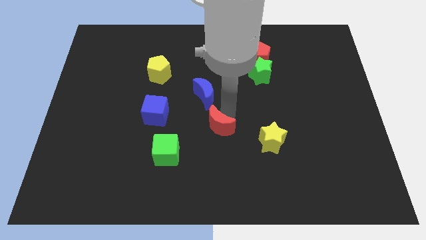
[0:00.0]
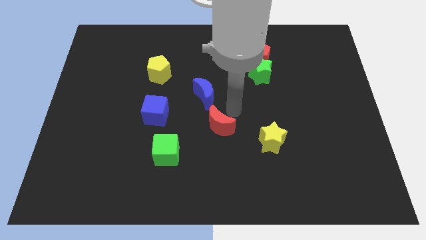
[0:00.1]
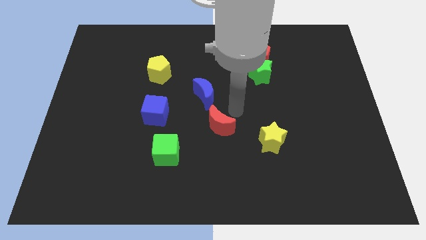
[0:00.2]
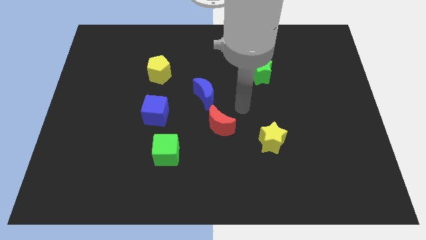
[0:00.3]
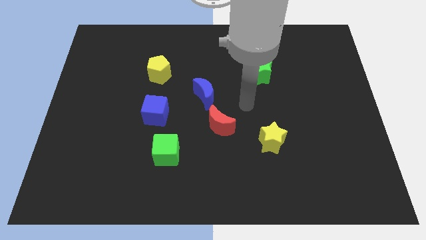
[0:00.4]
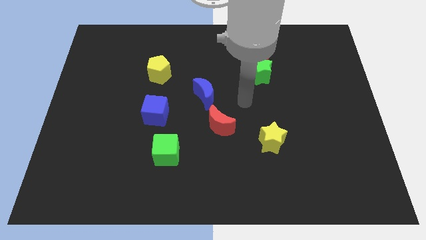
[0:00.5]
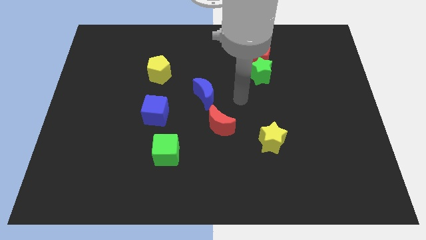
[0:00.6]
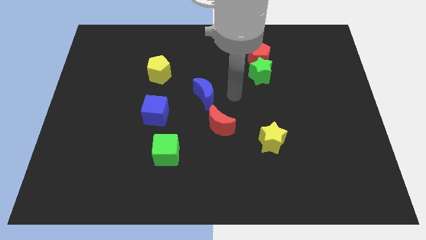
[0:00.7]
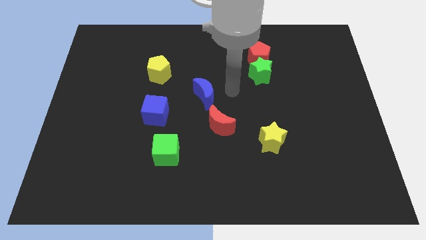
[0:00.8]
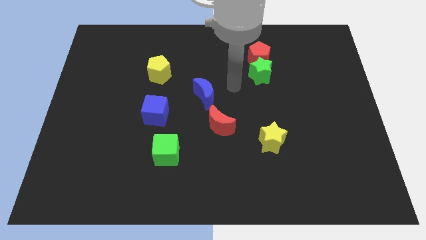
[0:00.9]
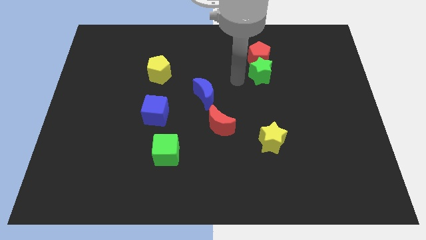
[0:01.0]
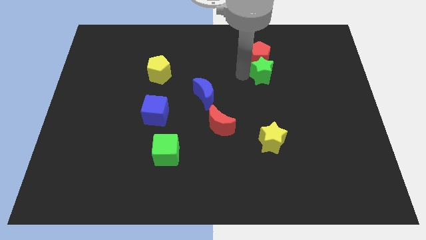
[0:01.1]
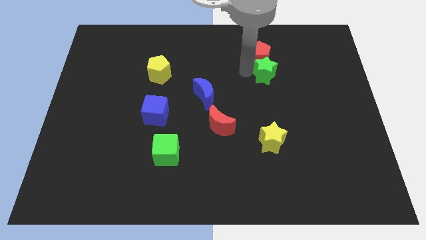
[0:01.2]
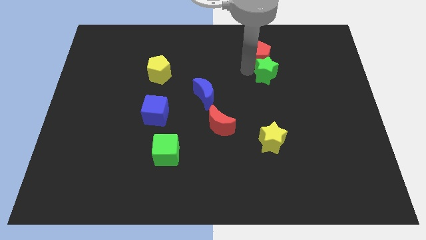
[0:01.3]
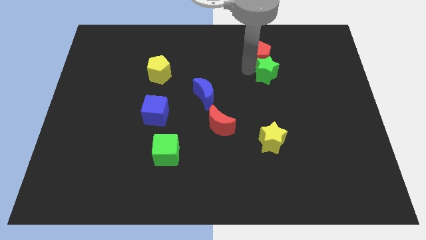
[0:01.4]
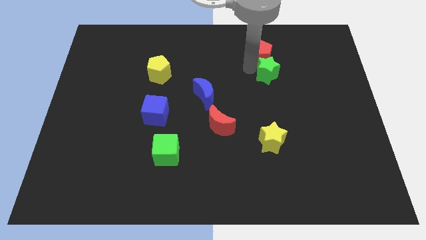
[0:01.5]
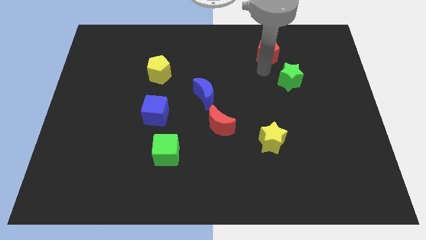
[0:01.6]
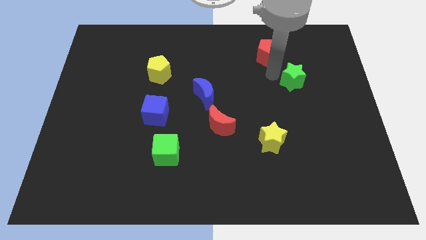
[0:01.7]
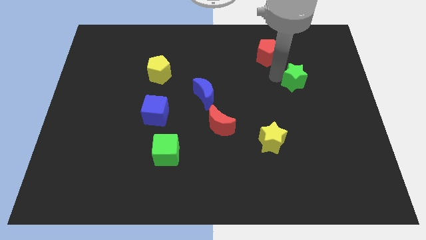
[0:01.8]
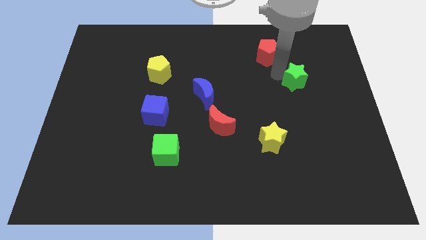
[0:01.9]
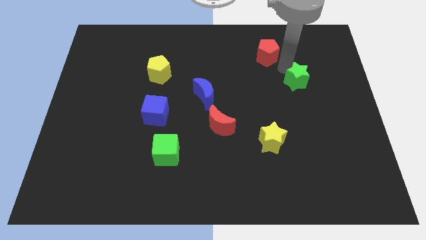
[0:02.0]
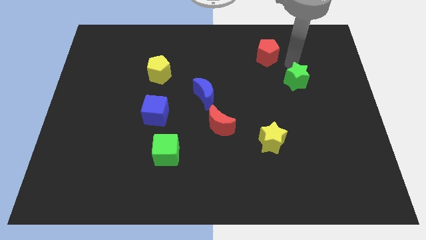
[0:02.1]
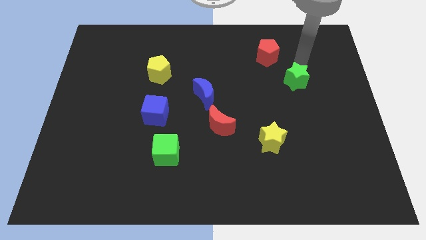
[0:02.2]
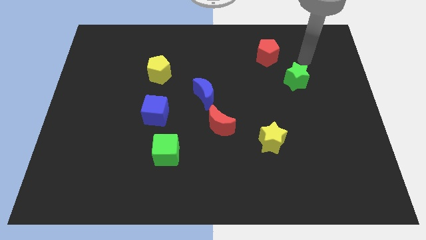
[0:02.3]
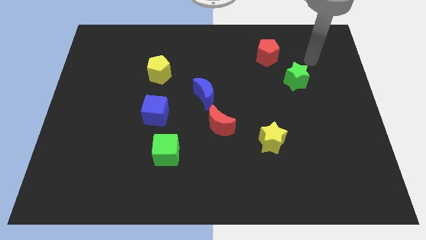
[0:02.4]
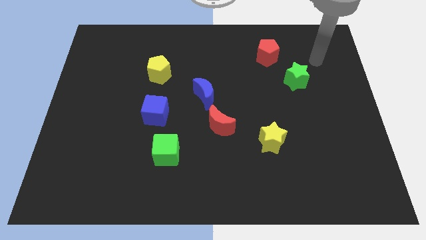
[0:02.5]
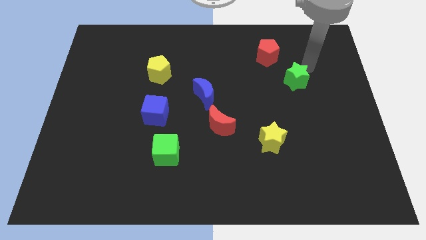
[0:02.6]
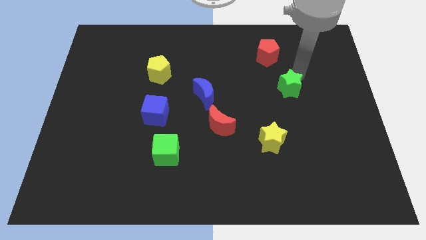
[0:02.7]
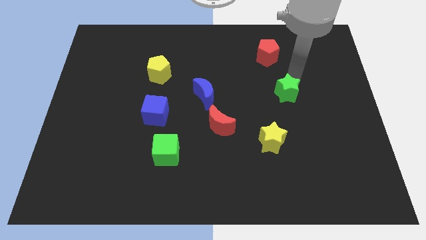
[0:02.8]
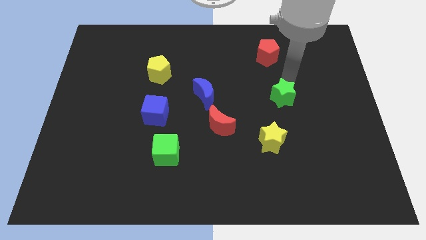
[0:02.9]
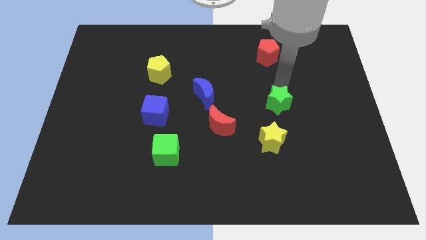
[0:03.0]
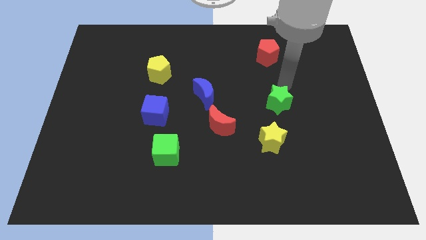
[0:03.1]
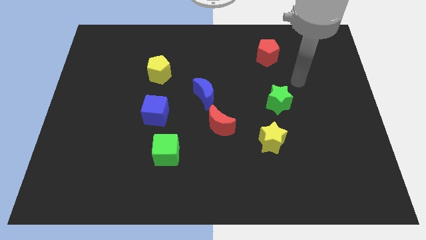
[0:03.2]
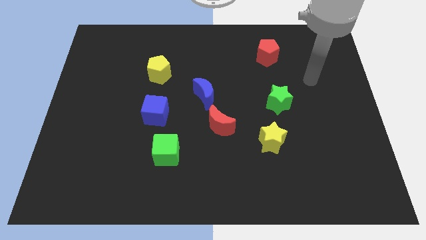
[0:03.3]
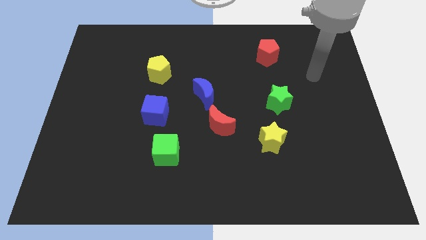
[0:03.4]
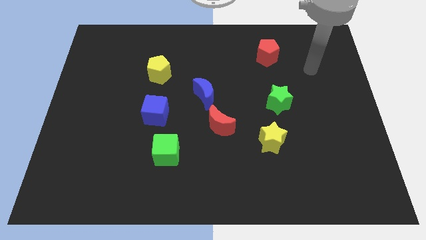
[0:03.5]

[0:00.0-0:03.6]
move the green star vertically above the yellow star

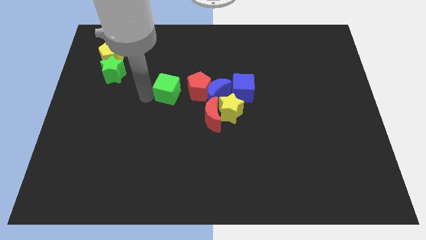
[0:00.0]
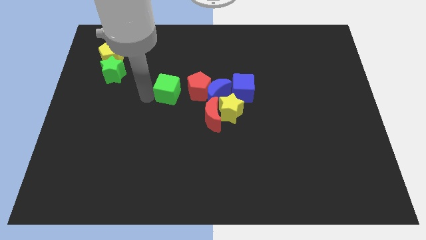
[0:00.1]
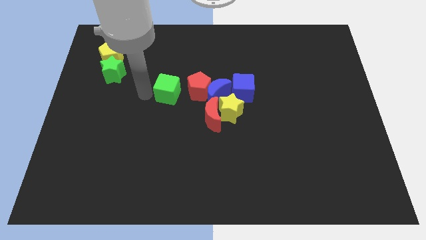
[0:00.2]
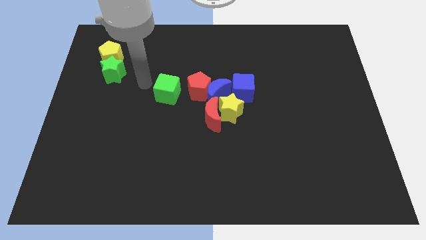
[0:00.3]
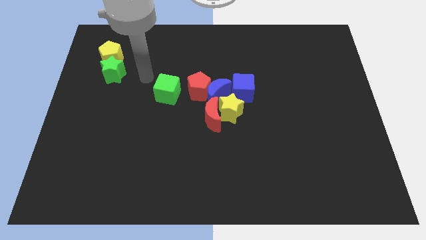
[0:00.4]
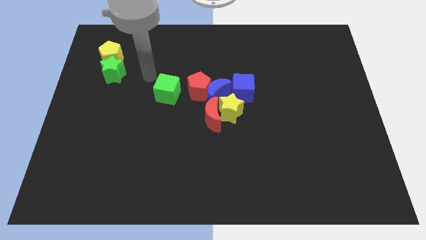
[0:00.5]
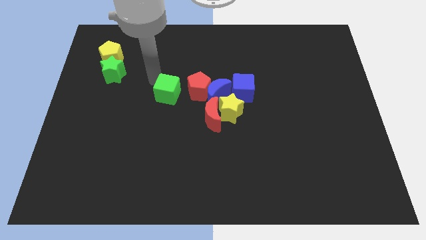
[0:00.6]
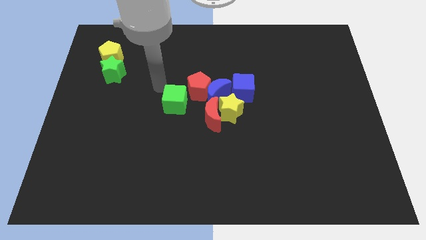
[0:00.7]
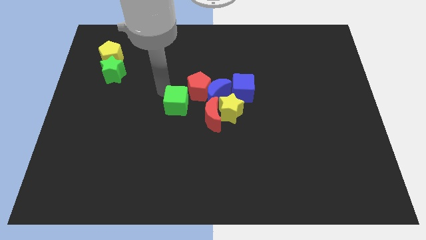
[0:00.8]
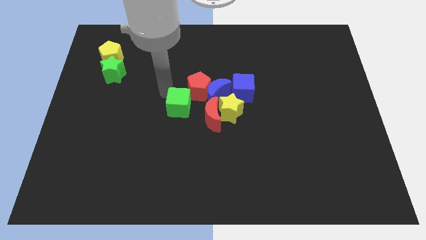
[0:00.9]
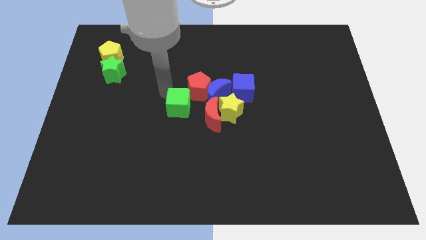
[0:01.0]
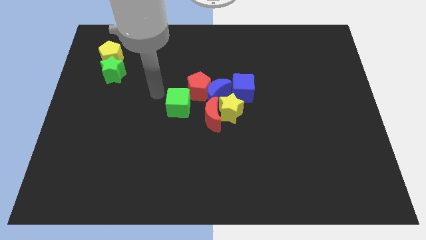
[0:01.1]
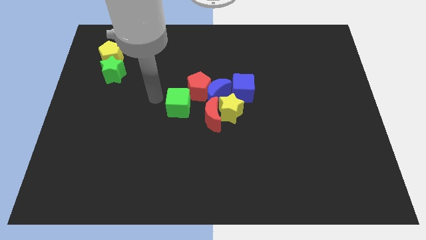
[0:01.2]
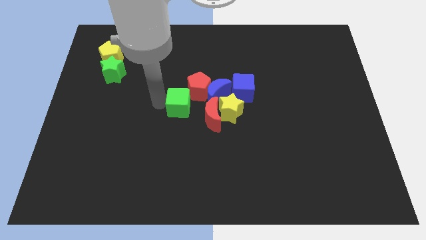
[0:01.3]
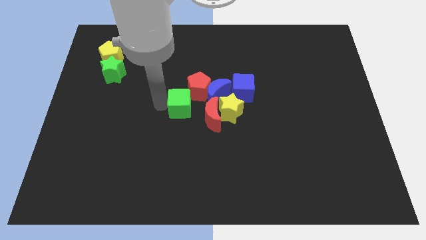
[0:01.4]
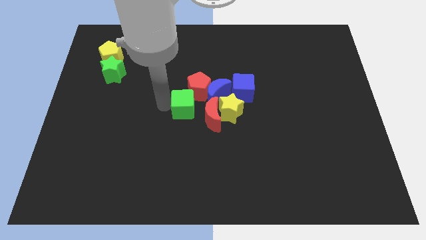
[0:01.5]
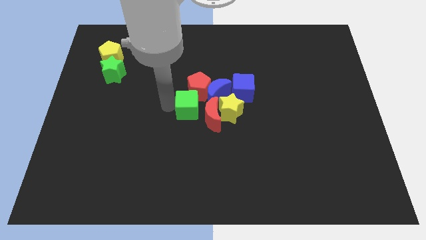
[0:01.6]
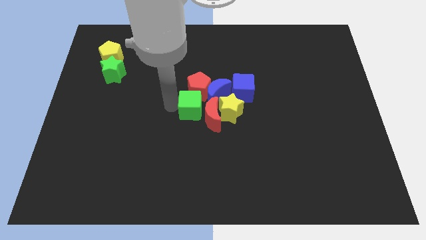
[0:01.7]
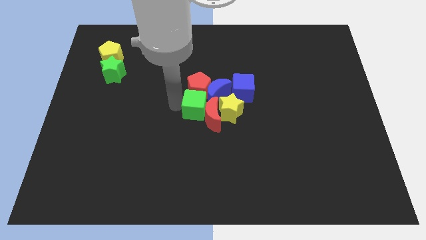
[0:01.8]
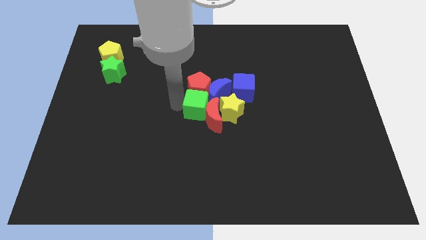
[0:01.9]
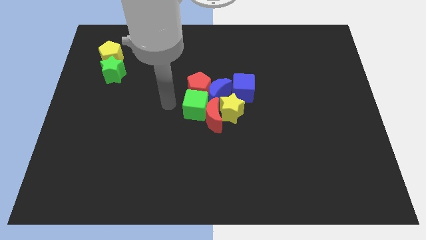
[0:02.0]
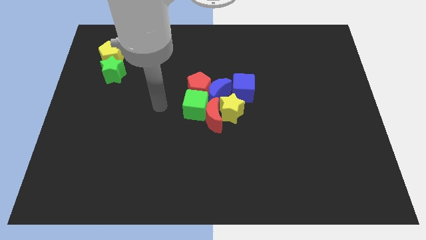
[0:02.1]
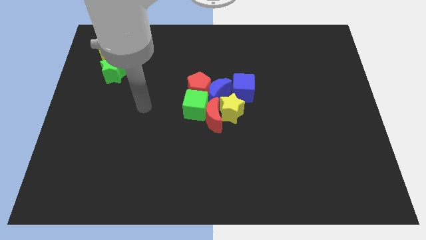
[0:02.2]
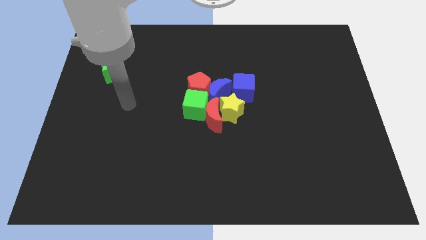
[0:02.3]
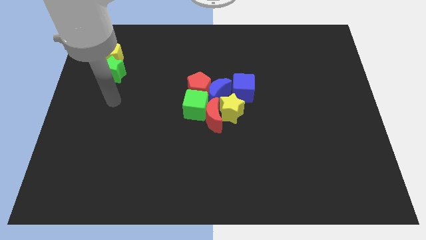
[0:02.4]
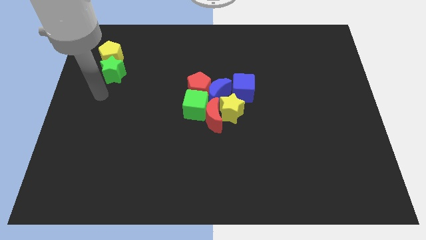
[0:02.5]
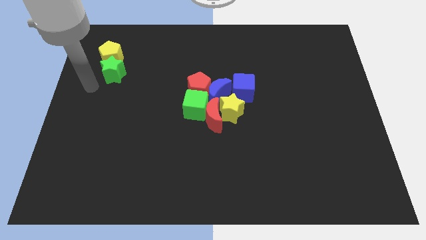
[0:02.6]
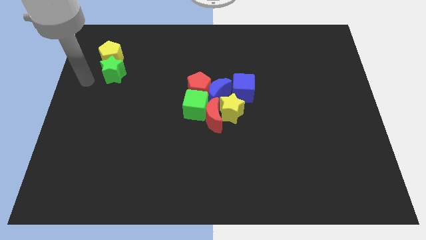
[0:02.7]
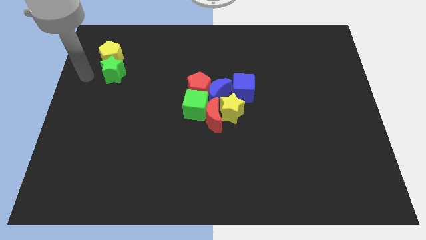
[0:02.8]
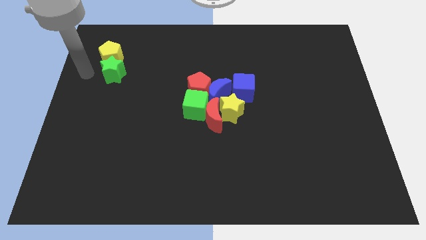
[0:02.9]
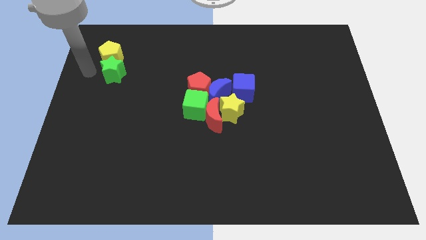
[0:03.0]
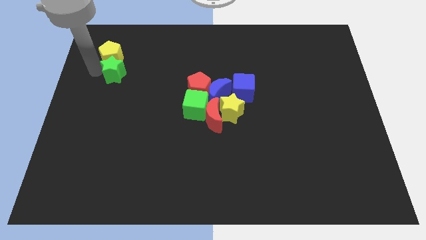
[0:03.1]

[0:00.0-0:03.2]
place the green cube at the bottom of the red pentagon

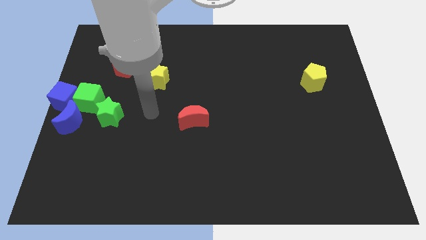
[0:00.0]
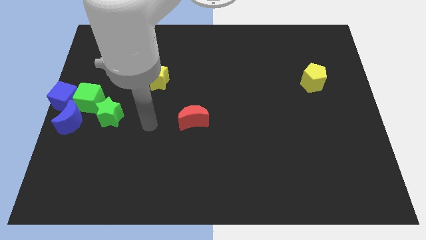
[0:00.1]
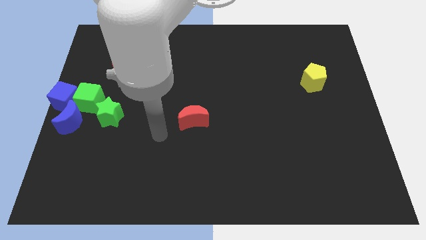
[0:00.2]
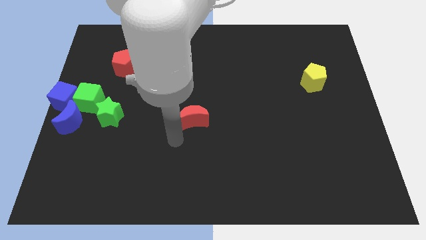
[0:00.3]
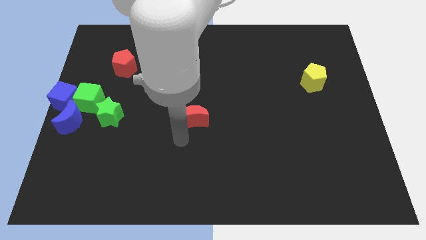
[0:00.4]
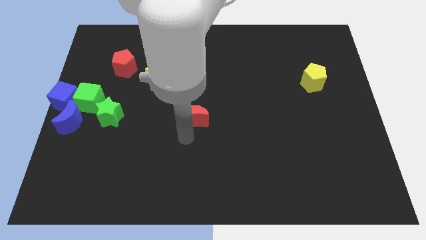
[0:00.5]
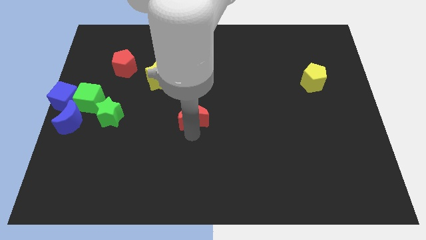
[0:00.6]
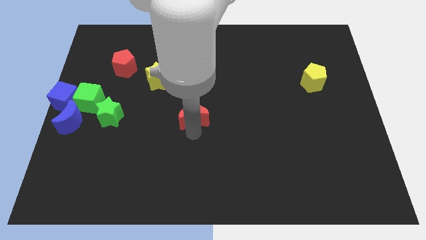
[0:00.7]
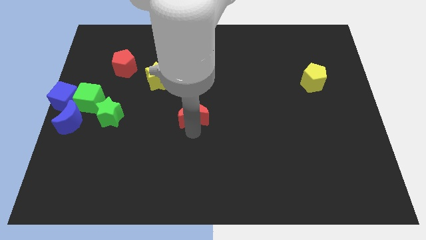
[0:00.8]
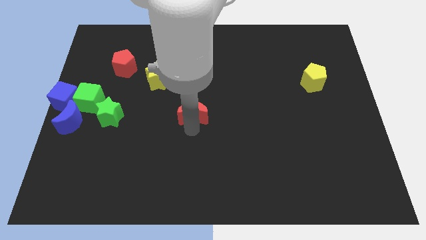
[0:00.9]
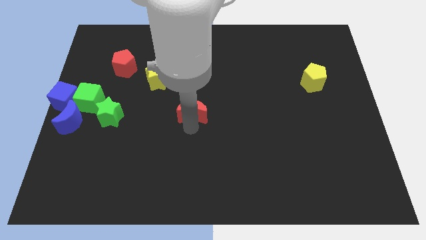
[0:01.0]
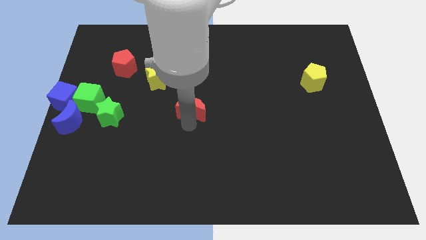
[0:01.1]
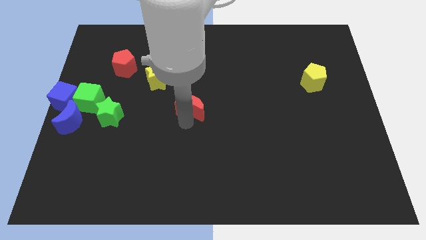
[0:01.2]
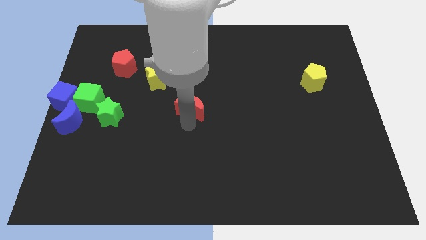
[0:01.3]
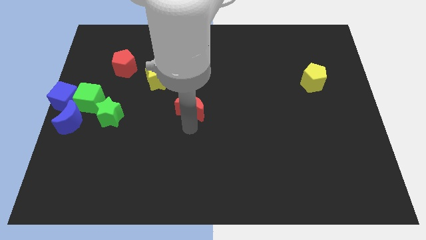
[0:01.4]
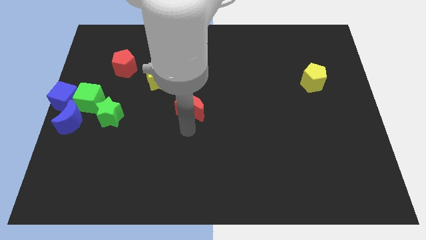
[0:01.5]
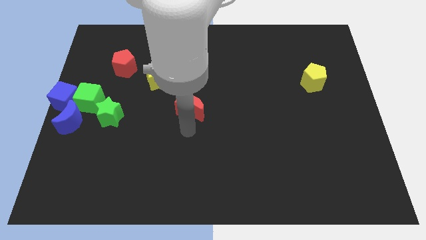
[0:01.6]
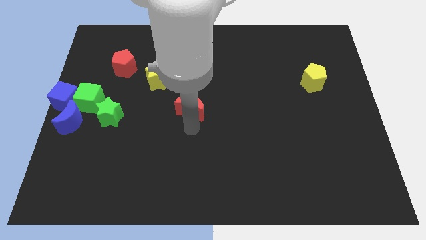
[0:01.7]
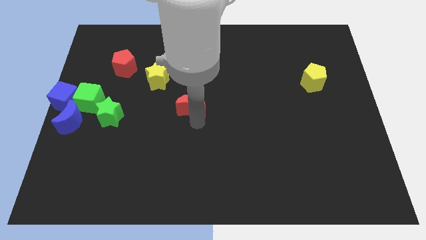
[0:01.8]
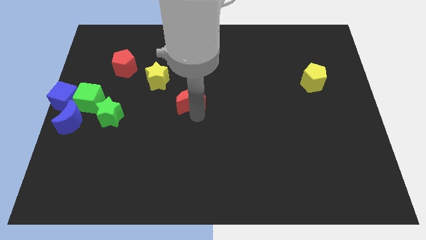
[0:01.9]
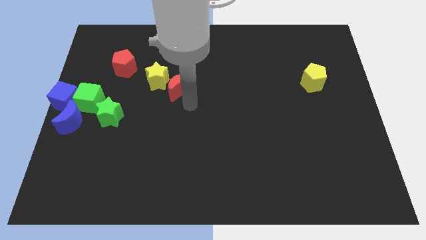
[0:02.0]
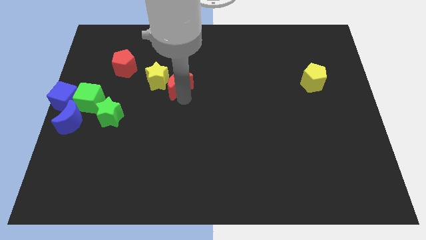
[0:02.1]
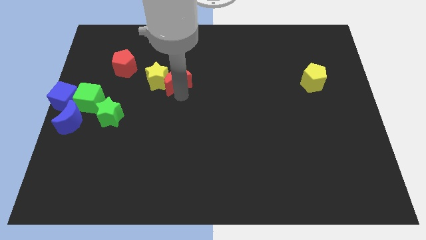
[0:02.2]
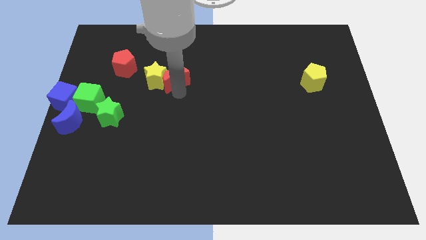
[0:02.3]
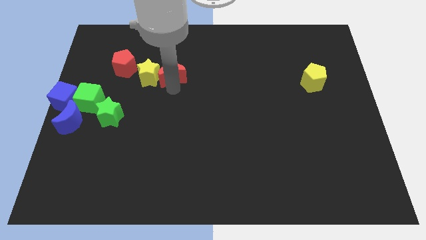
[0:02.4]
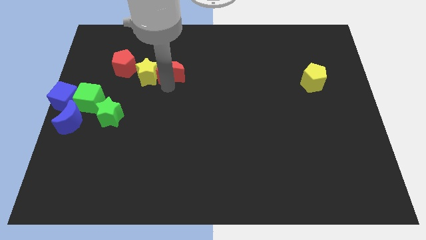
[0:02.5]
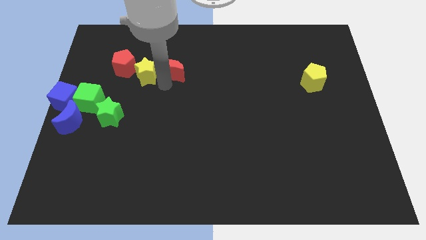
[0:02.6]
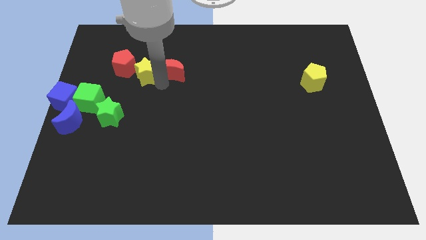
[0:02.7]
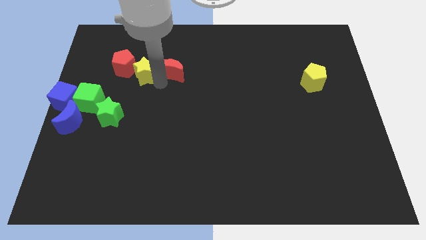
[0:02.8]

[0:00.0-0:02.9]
place the red moon to the right of the yellow star
